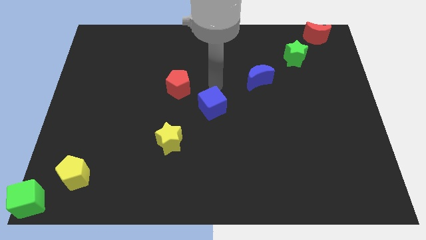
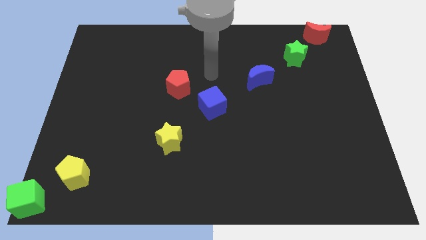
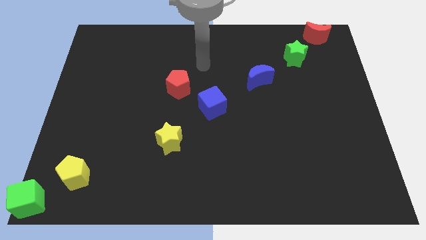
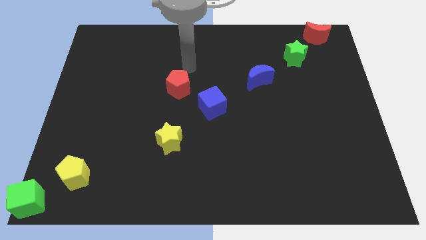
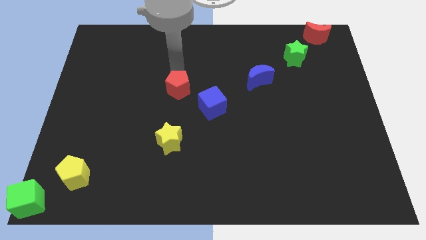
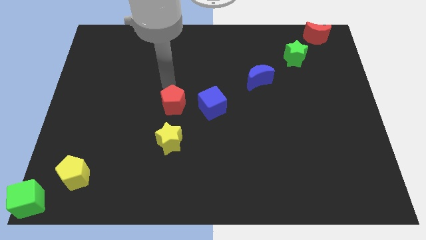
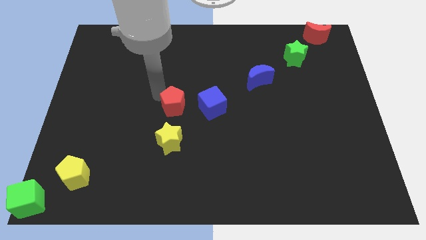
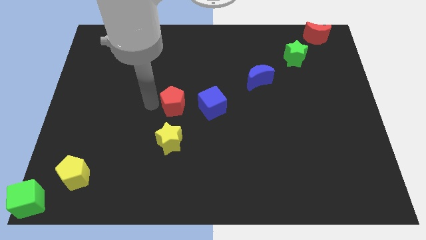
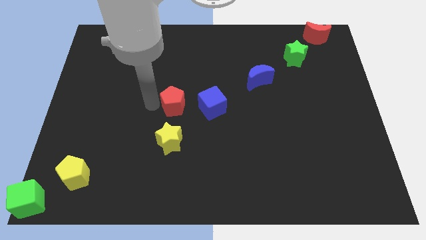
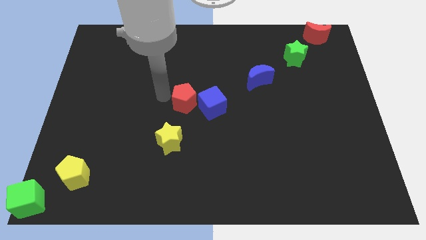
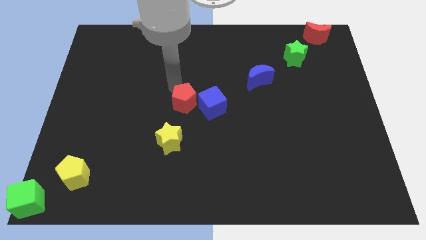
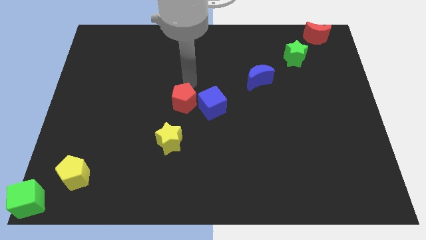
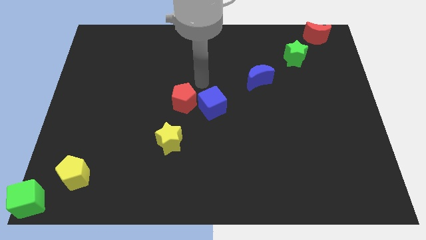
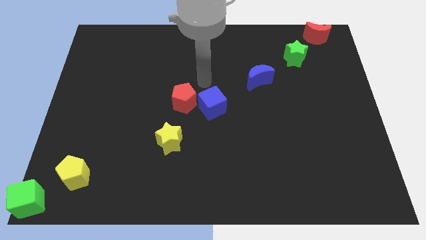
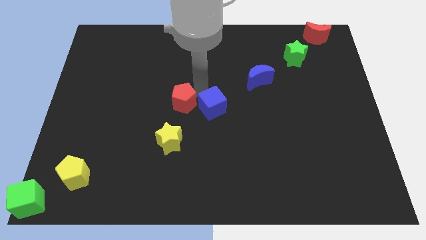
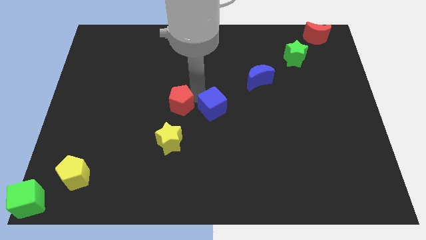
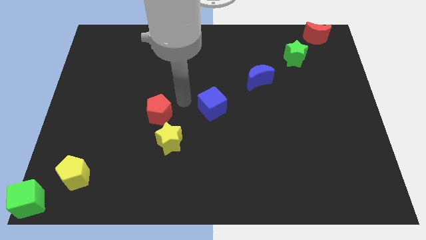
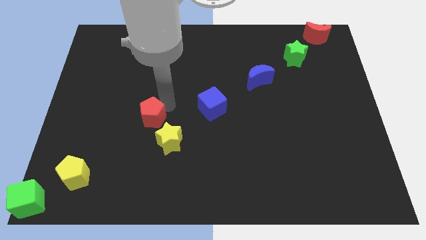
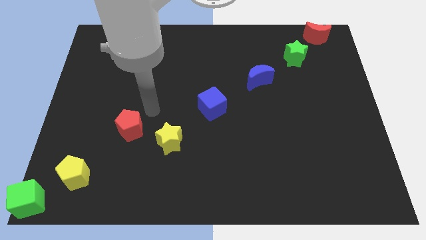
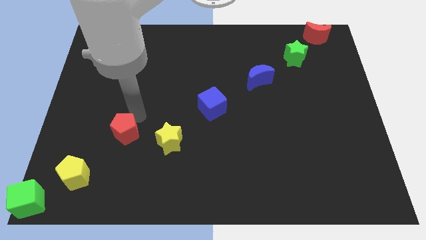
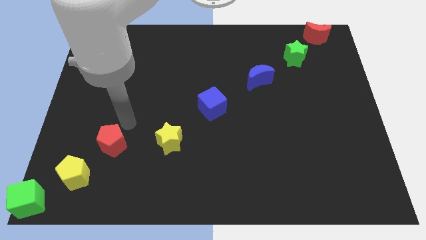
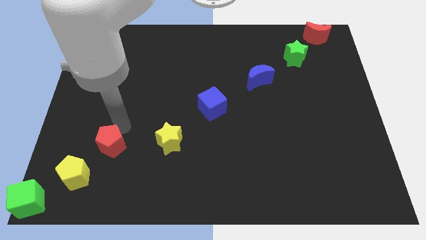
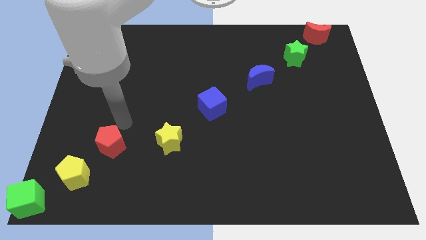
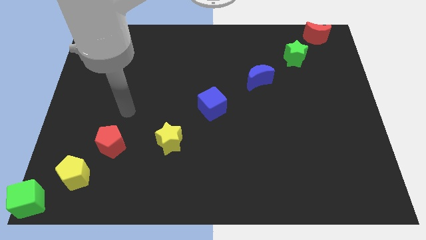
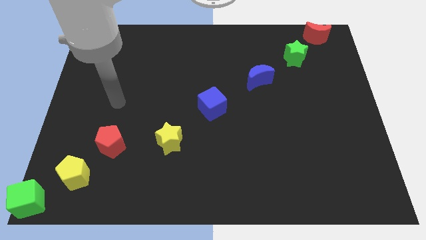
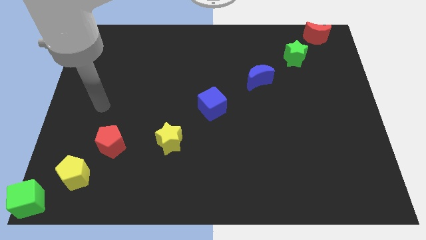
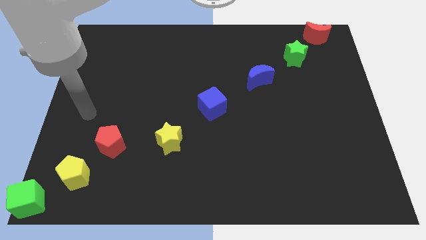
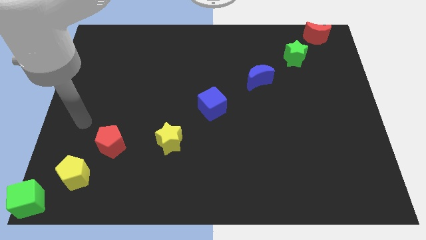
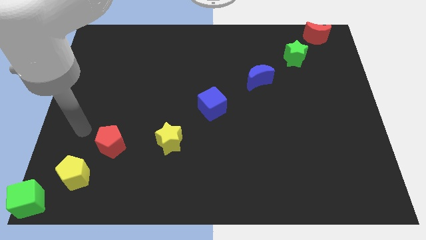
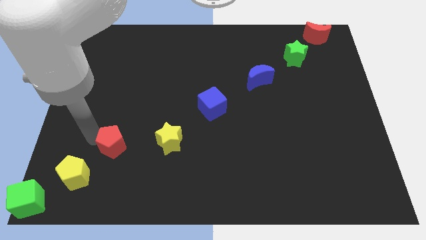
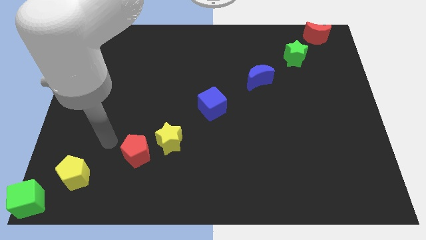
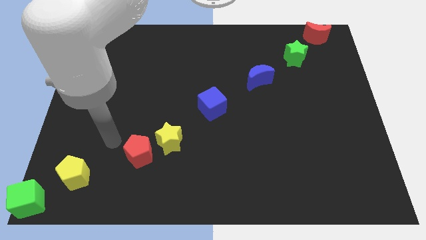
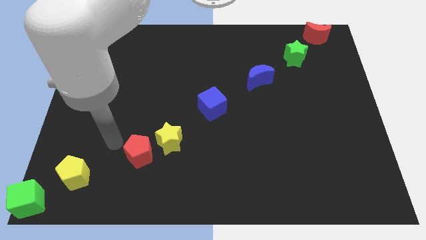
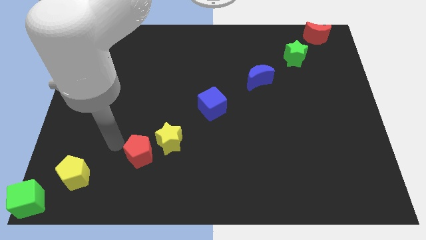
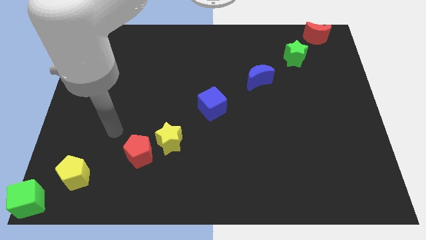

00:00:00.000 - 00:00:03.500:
slide the red pentagon to the bottom left side of the yellow star

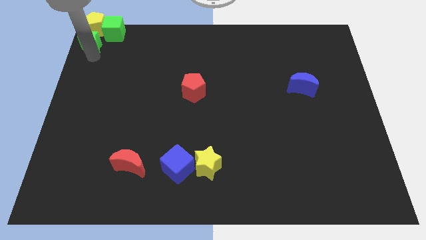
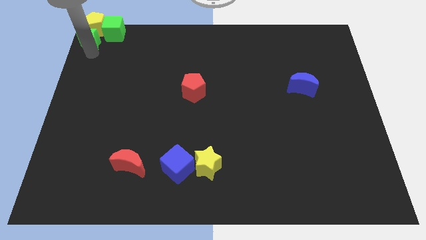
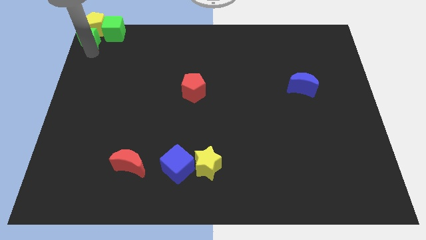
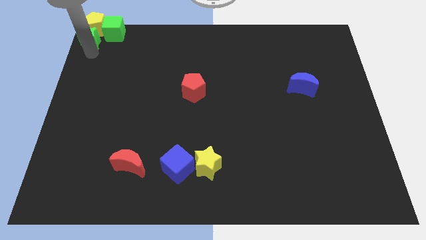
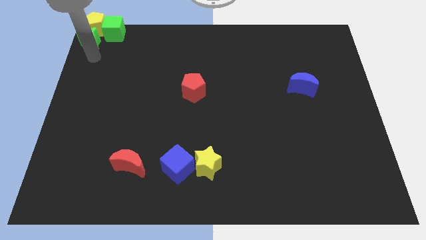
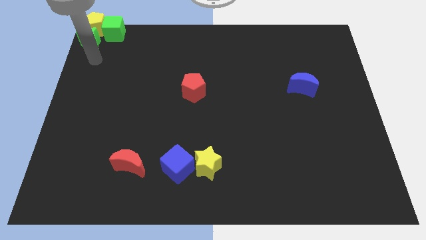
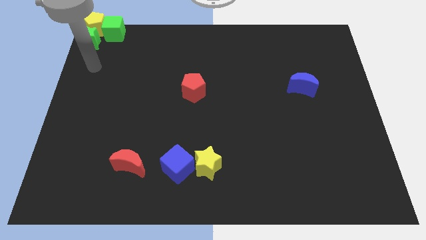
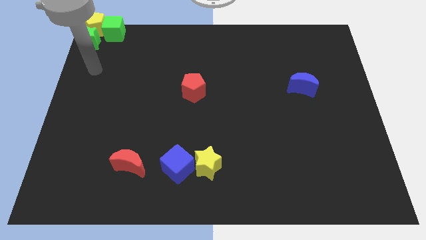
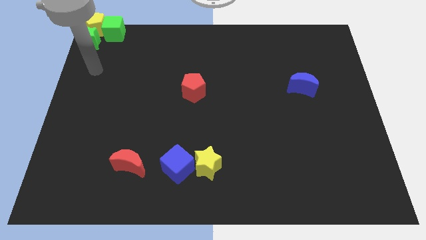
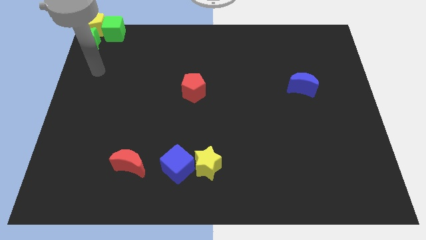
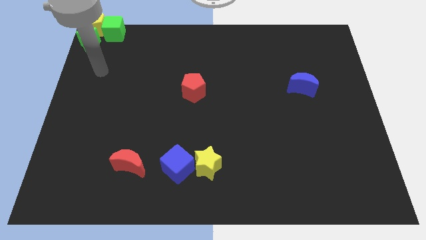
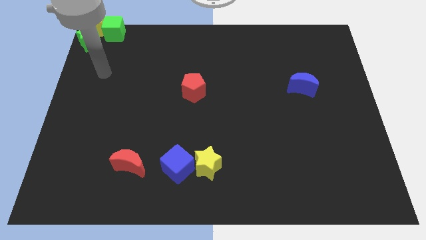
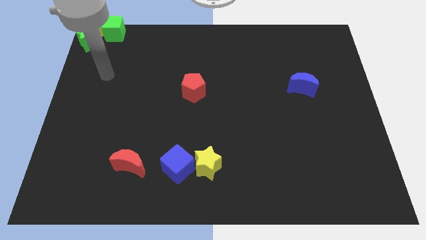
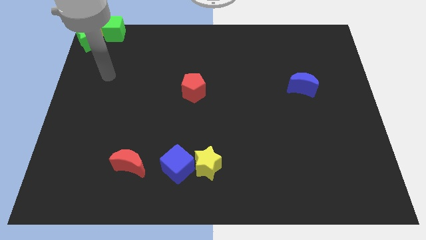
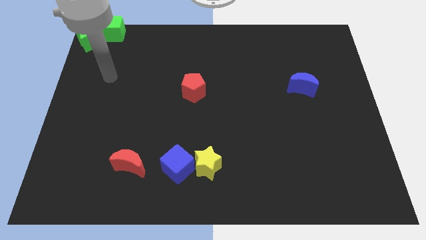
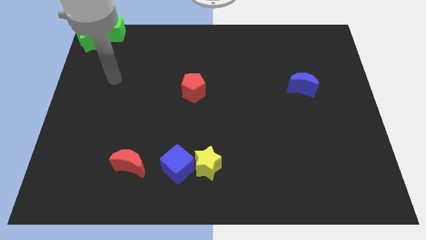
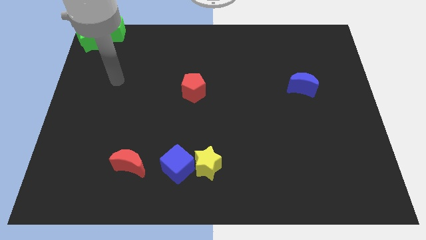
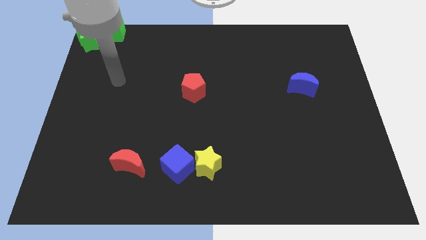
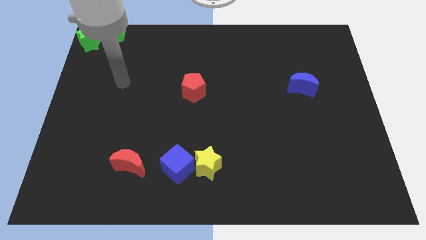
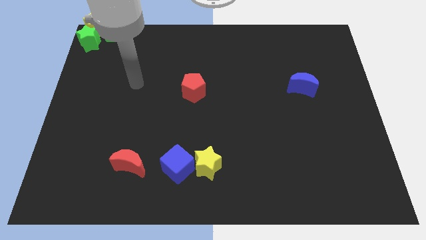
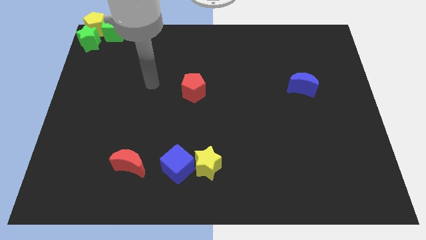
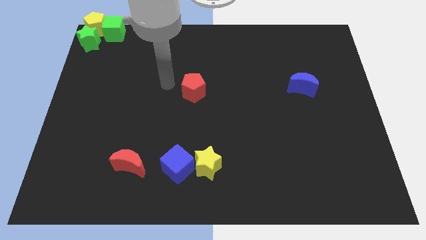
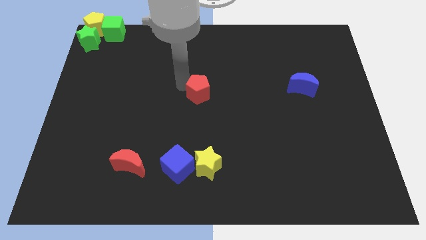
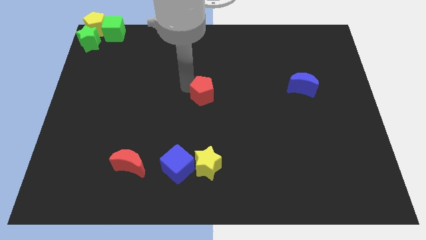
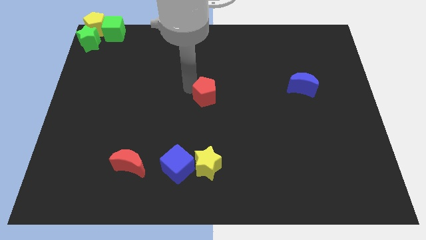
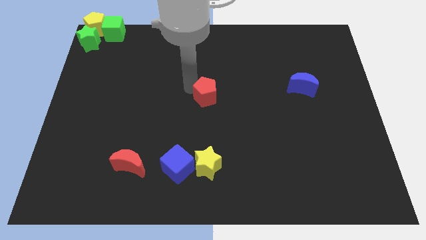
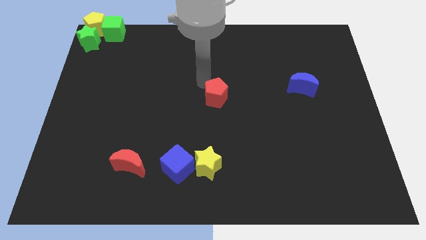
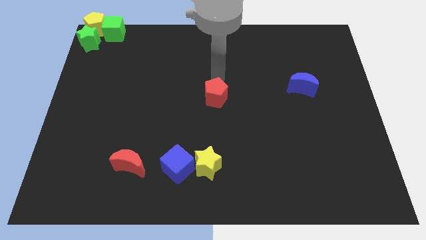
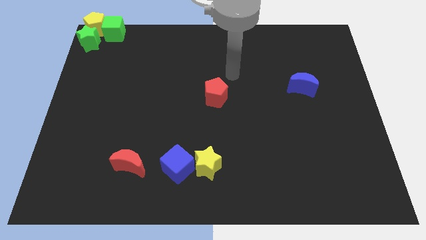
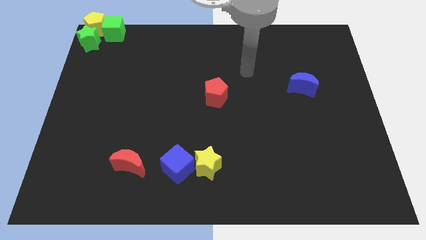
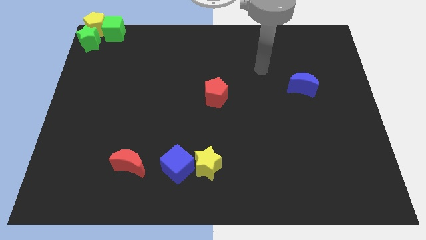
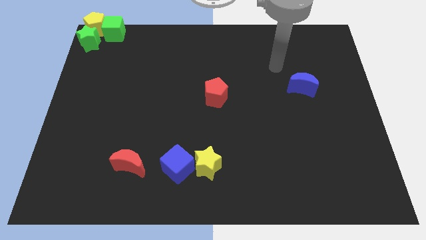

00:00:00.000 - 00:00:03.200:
hit the red pentagon

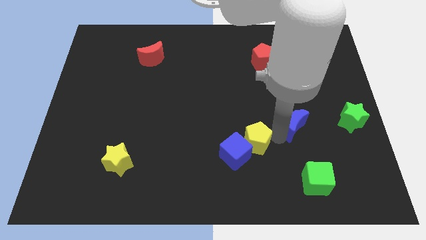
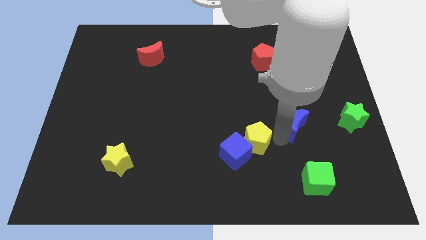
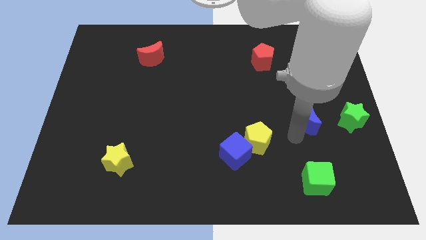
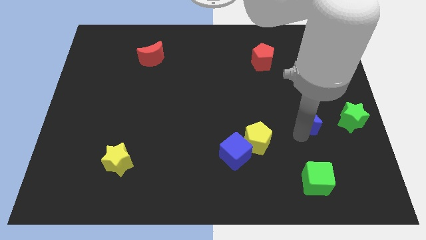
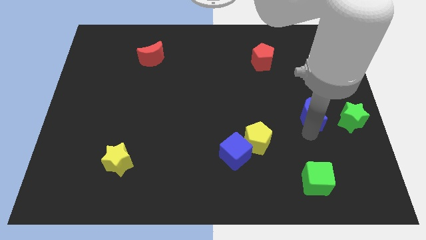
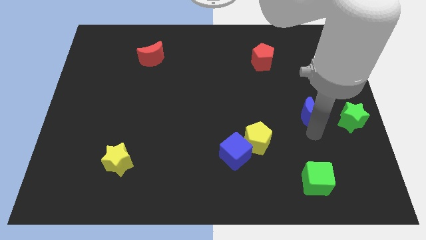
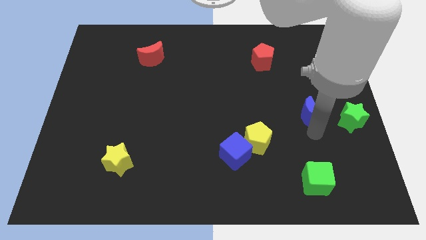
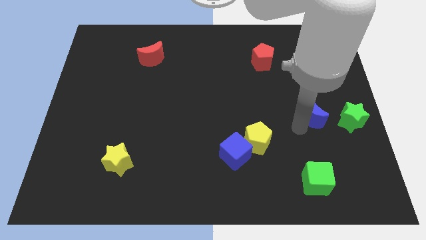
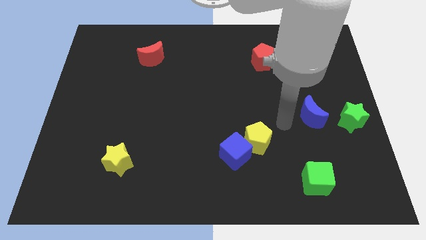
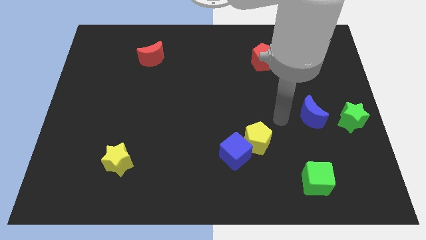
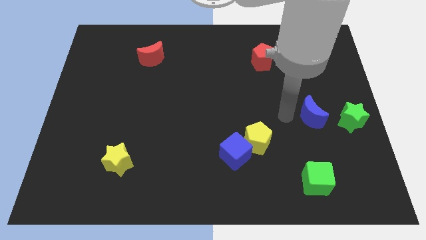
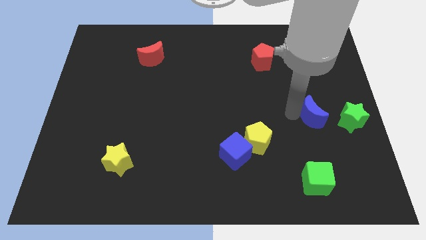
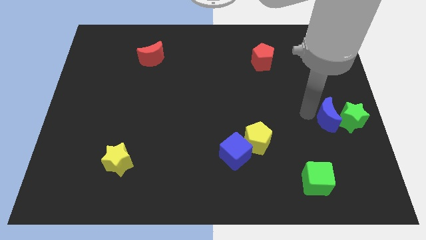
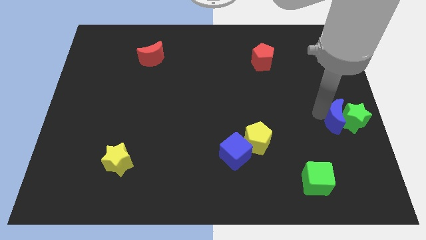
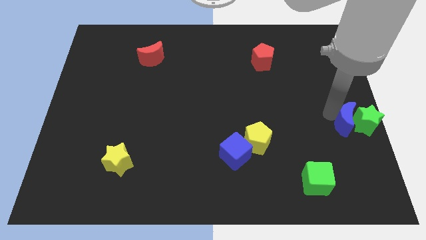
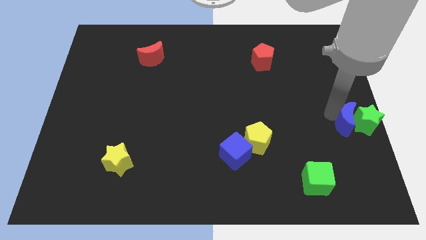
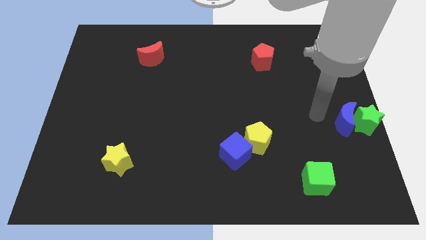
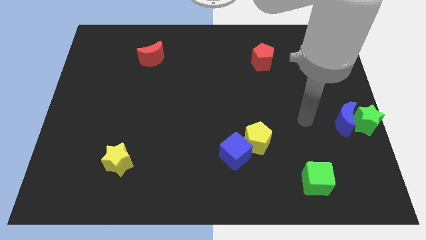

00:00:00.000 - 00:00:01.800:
push the blue crescent into the green star

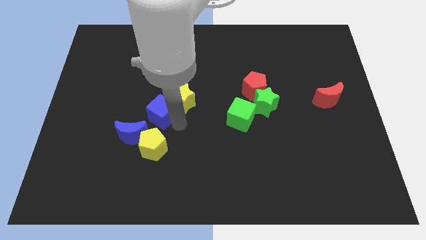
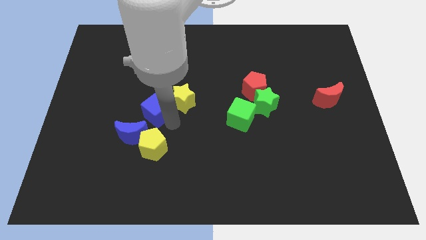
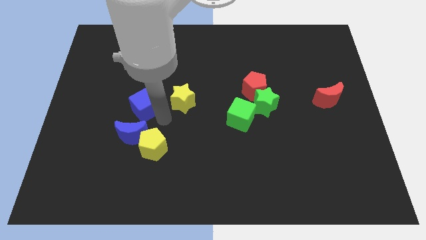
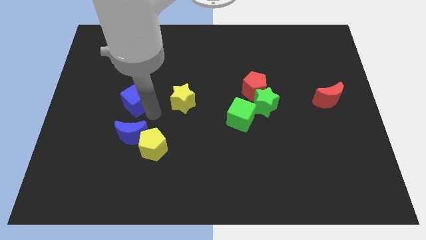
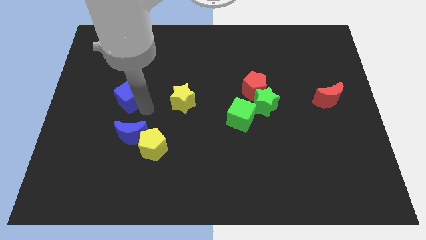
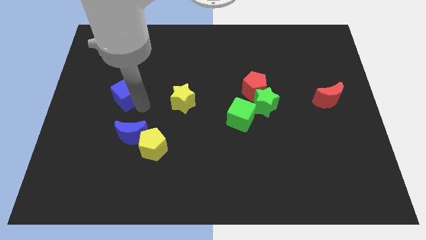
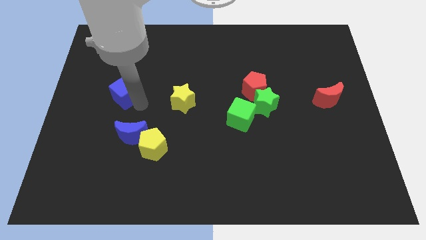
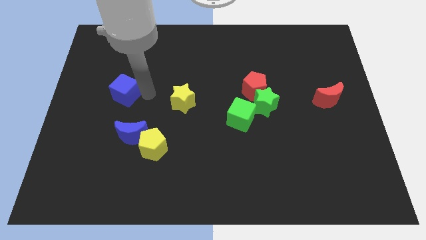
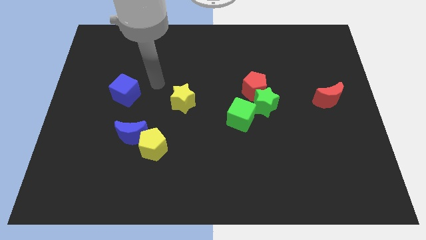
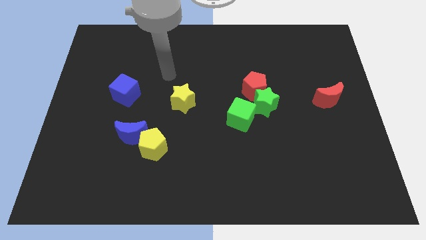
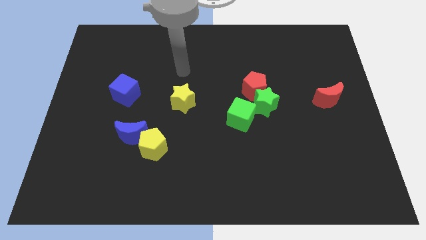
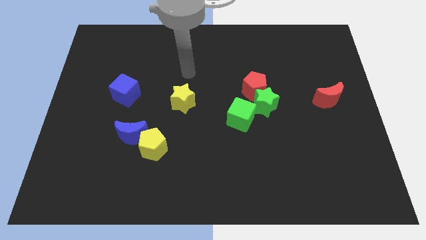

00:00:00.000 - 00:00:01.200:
move the blue cube to center left
